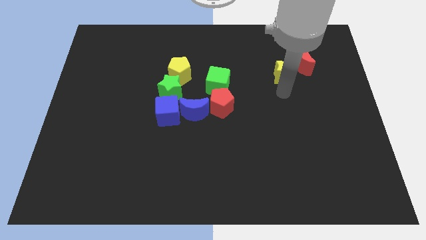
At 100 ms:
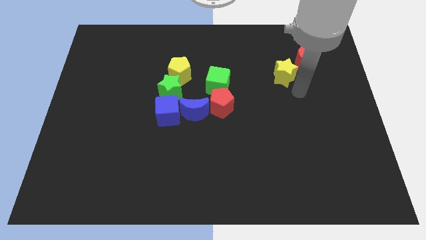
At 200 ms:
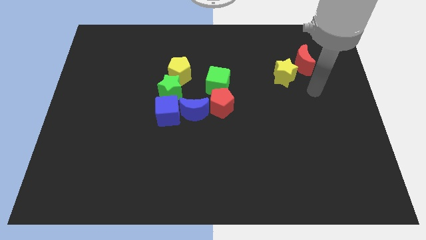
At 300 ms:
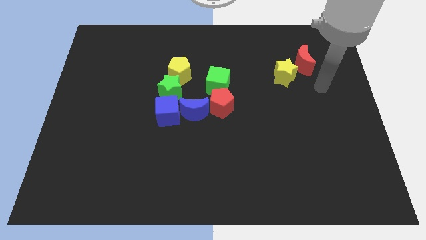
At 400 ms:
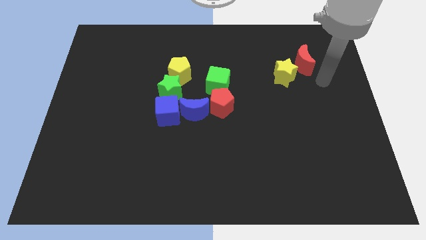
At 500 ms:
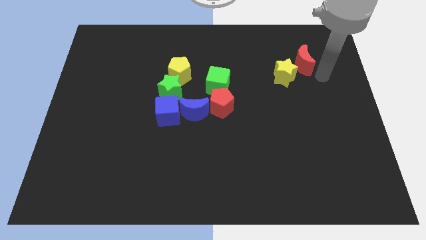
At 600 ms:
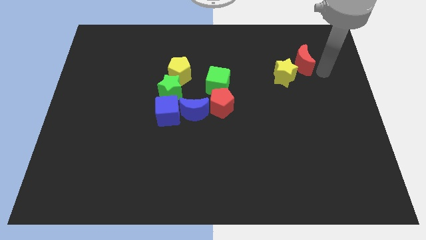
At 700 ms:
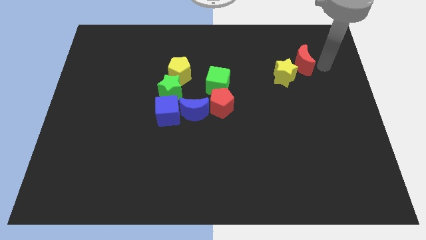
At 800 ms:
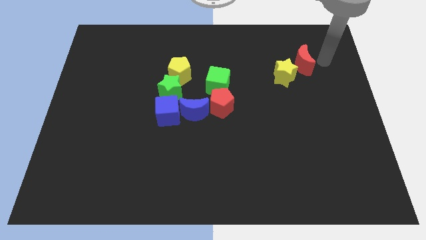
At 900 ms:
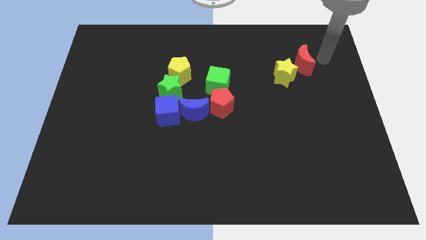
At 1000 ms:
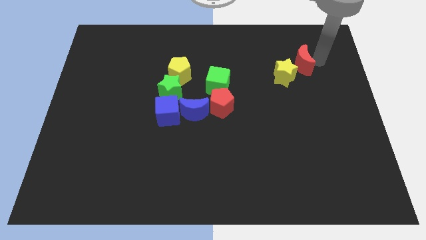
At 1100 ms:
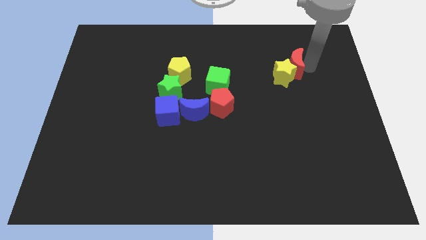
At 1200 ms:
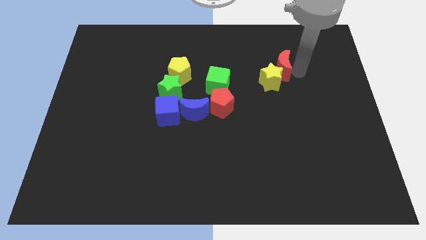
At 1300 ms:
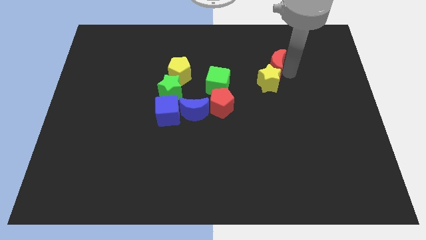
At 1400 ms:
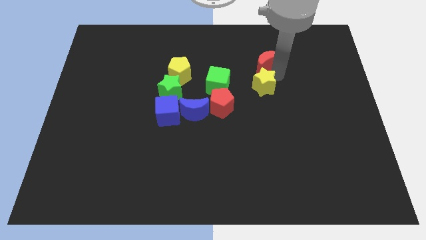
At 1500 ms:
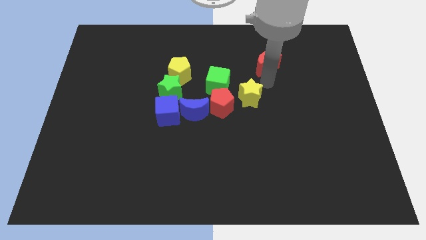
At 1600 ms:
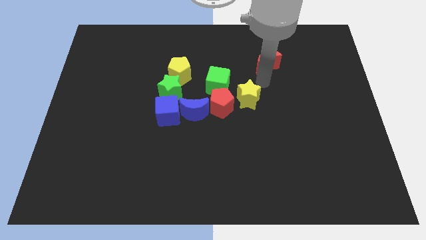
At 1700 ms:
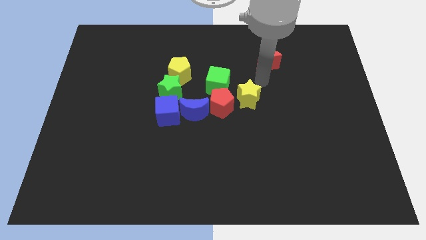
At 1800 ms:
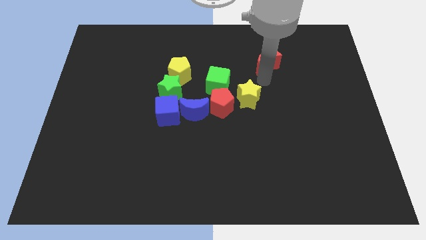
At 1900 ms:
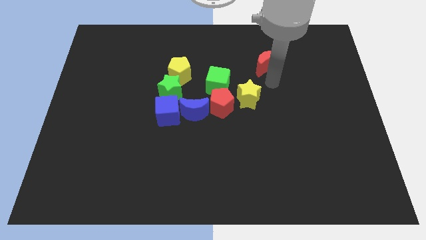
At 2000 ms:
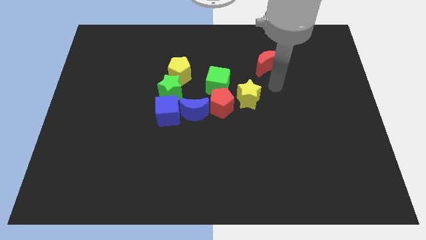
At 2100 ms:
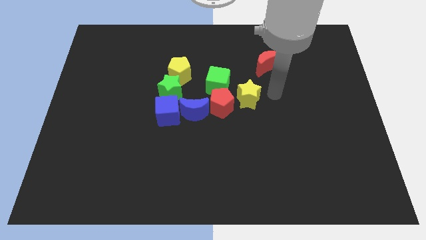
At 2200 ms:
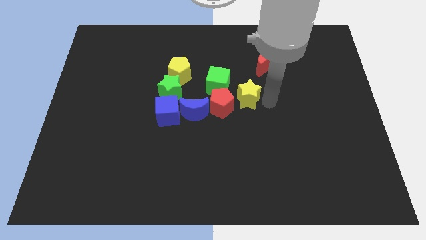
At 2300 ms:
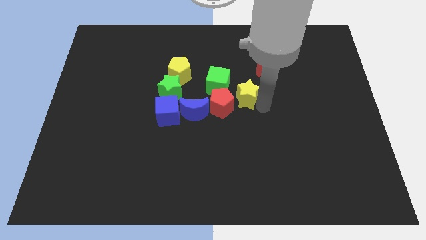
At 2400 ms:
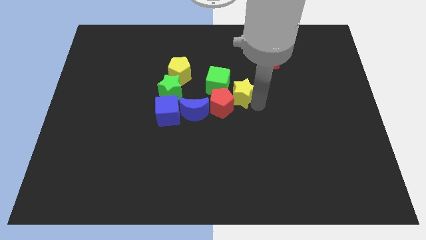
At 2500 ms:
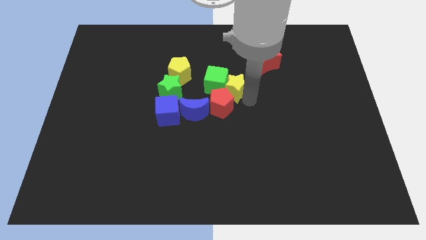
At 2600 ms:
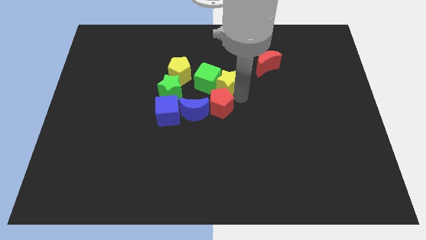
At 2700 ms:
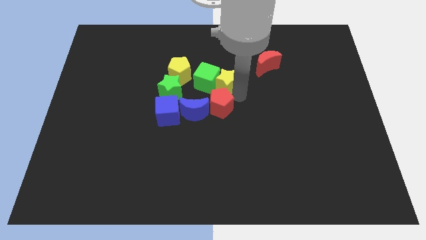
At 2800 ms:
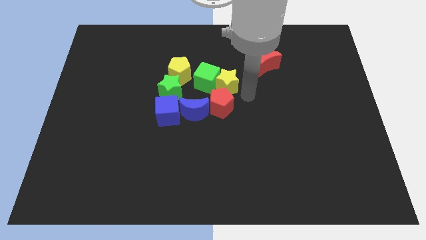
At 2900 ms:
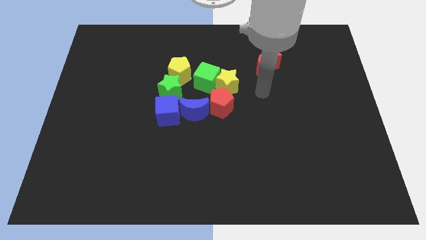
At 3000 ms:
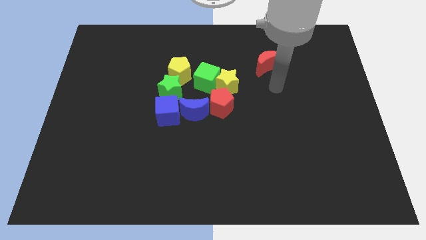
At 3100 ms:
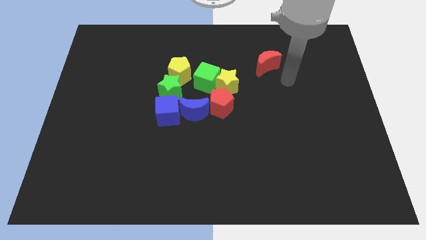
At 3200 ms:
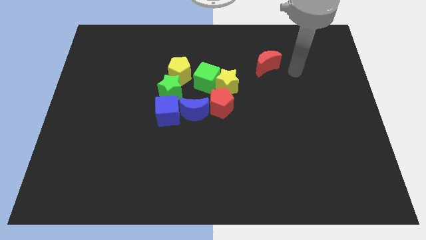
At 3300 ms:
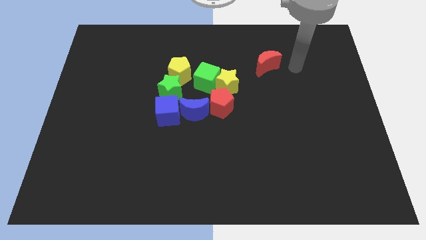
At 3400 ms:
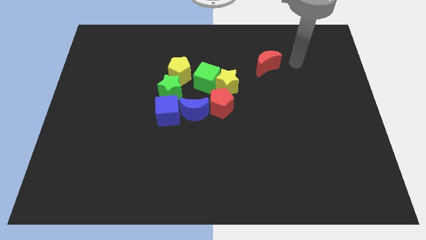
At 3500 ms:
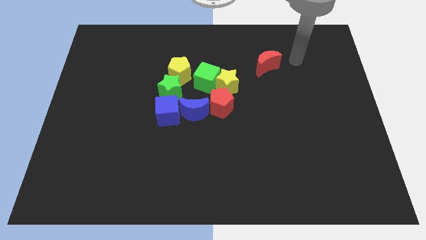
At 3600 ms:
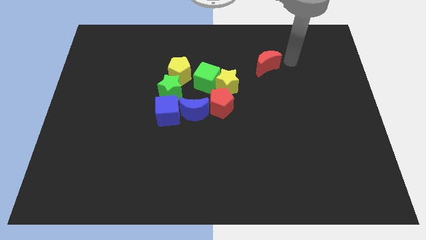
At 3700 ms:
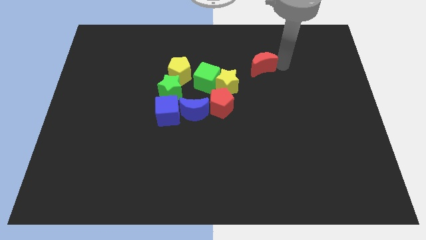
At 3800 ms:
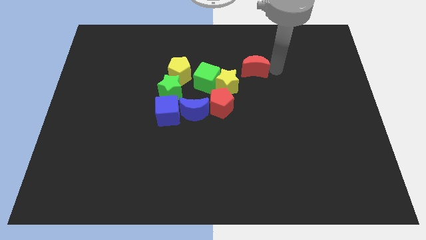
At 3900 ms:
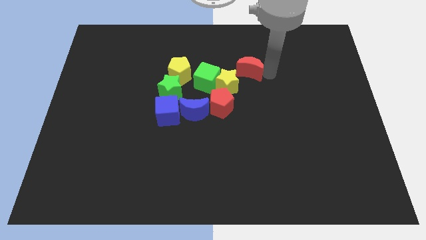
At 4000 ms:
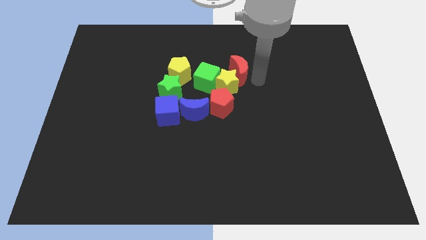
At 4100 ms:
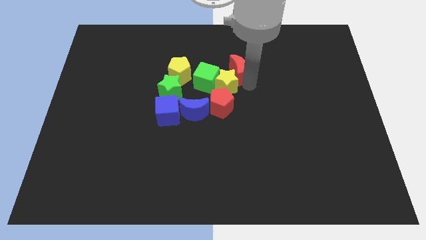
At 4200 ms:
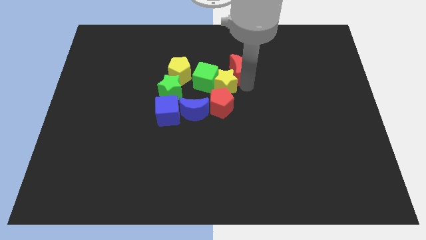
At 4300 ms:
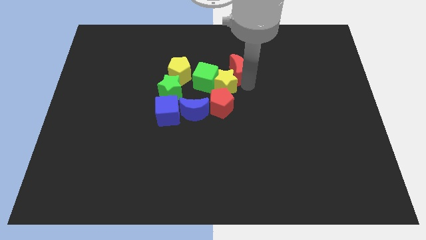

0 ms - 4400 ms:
slide the yellow star and the red crescent towards the green cube

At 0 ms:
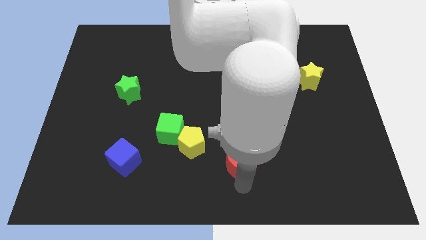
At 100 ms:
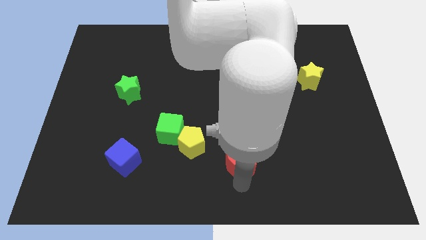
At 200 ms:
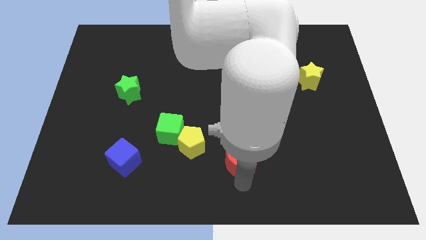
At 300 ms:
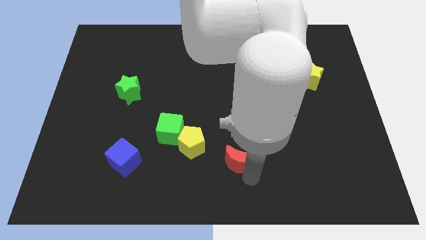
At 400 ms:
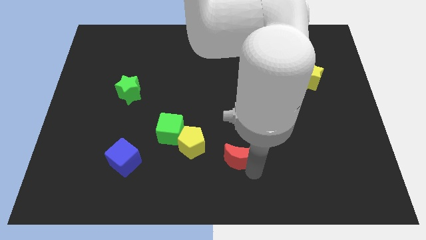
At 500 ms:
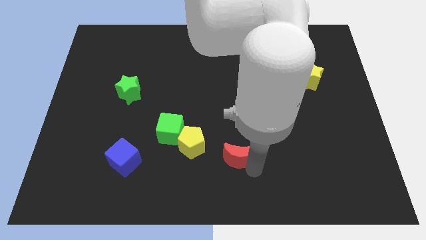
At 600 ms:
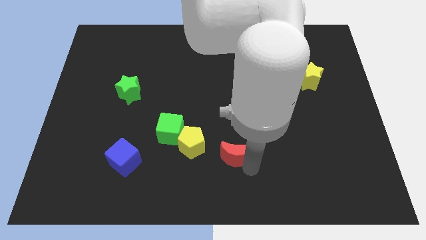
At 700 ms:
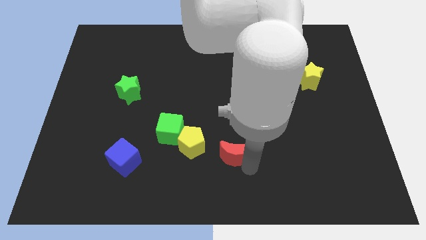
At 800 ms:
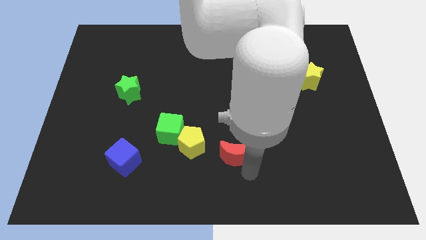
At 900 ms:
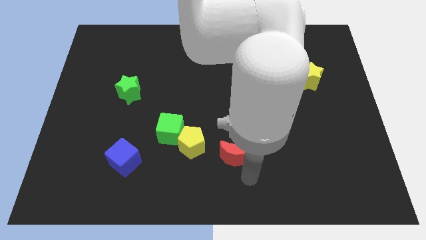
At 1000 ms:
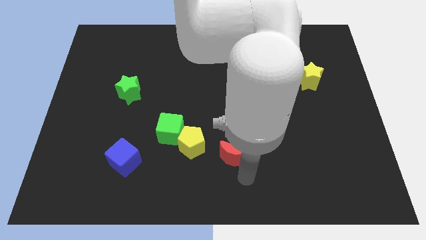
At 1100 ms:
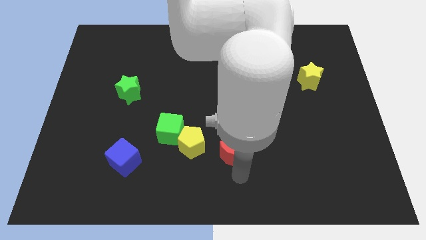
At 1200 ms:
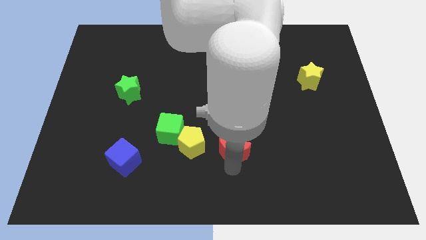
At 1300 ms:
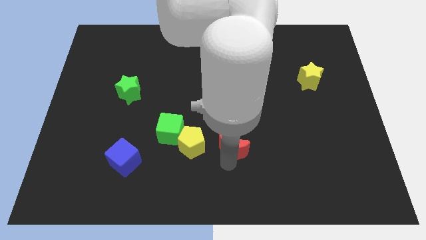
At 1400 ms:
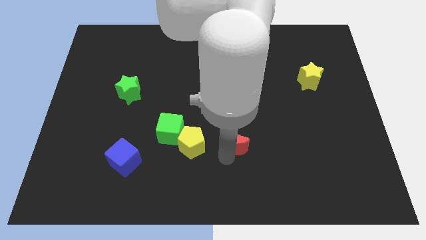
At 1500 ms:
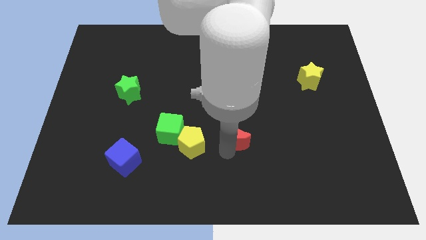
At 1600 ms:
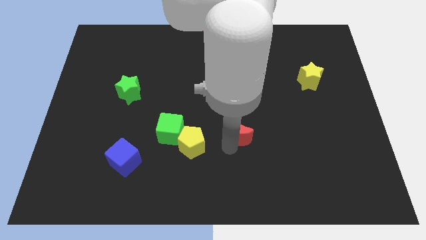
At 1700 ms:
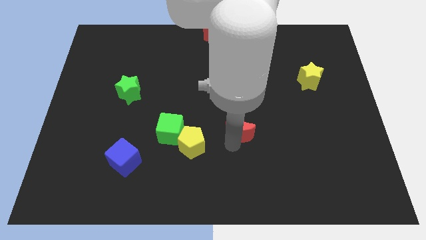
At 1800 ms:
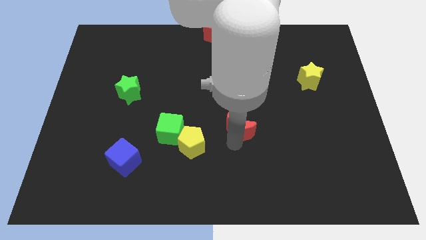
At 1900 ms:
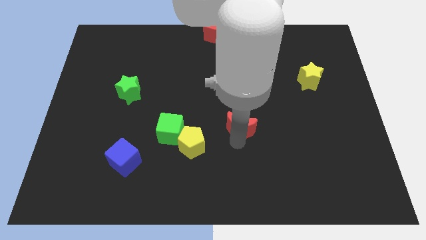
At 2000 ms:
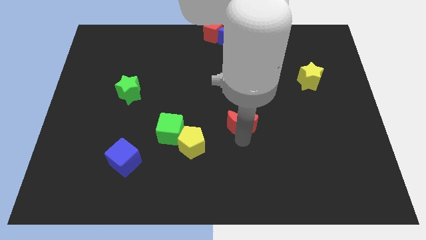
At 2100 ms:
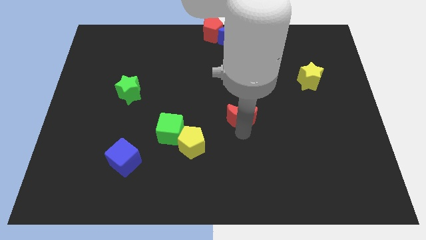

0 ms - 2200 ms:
push the red moon to the top right side of yellow pentagon

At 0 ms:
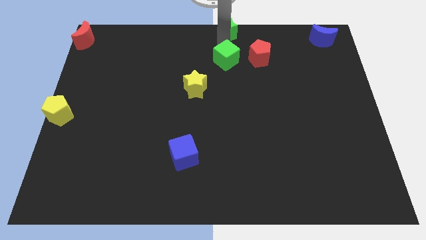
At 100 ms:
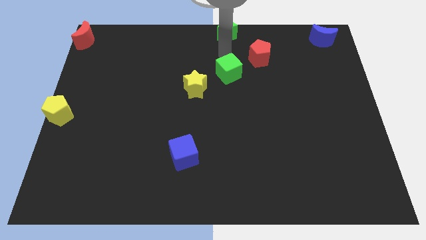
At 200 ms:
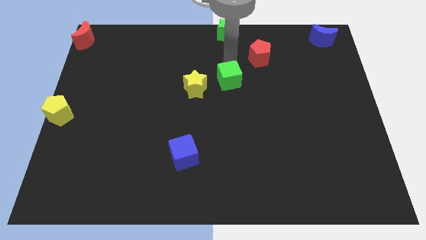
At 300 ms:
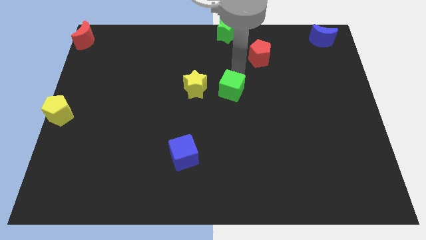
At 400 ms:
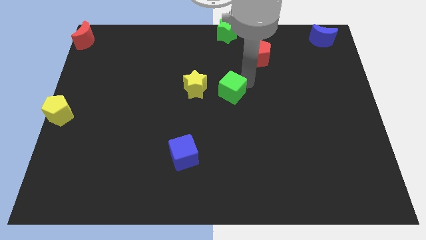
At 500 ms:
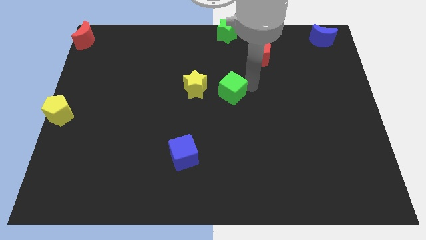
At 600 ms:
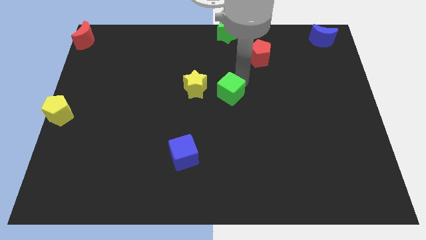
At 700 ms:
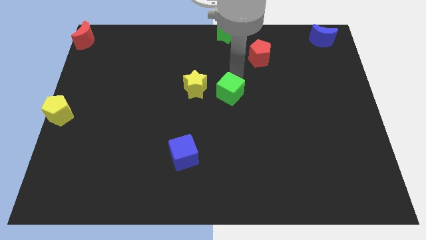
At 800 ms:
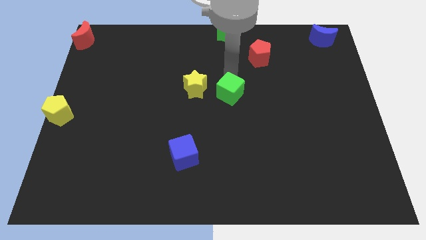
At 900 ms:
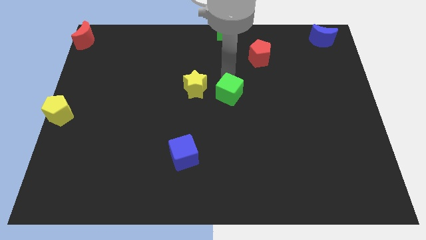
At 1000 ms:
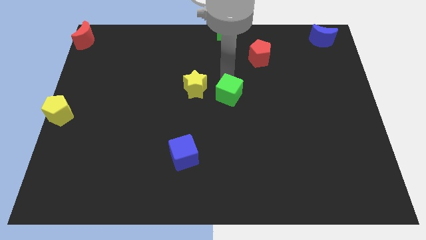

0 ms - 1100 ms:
push the green cube towards the bottom side of the board

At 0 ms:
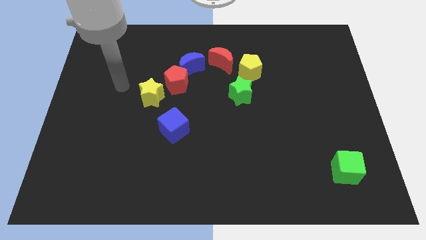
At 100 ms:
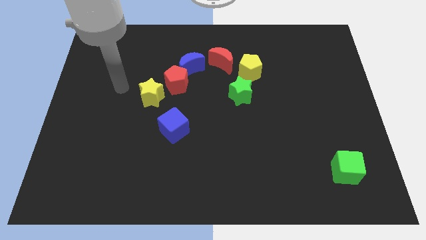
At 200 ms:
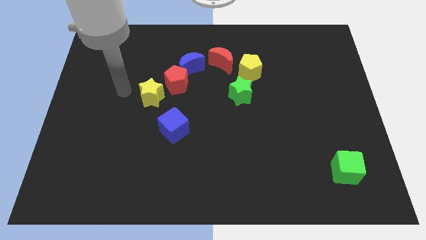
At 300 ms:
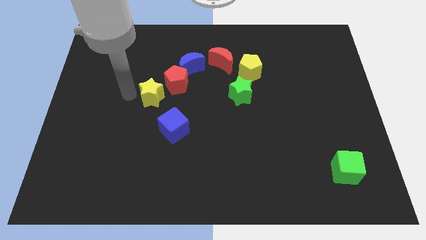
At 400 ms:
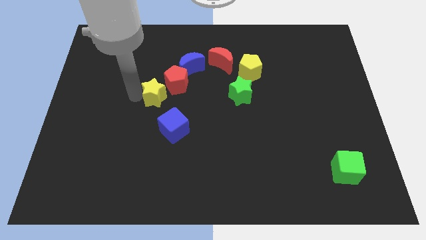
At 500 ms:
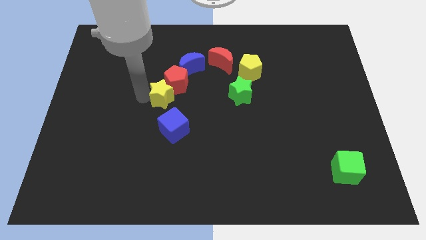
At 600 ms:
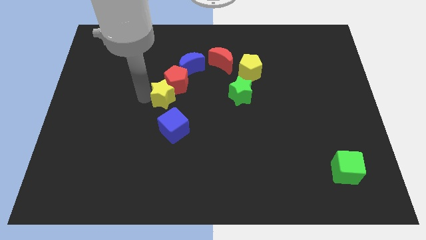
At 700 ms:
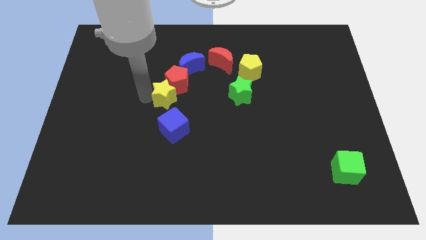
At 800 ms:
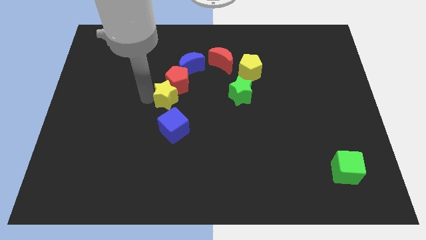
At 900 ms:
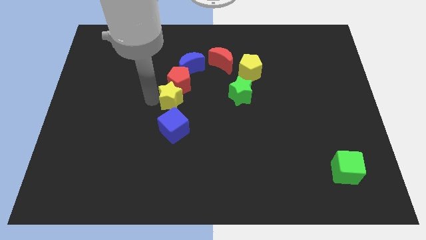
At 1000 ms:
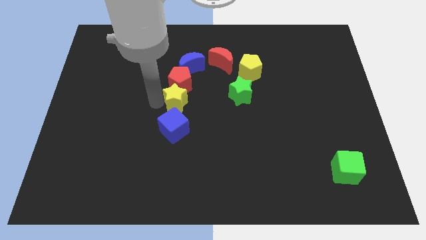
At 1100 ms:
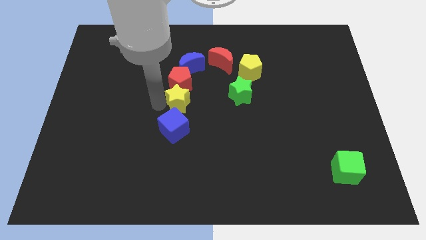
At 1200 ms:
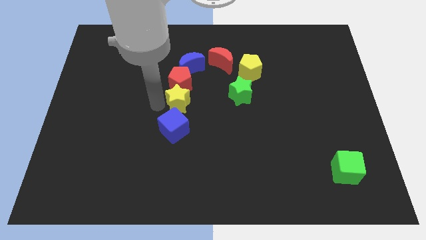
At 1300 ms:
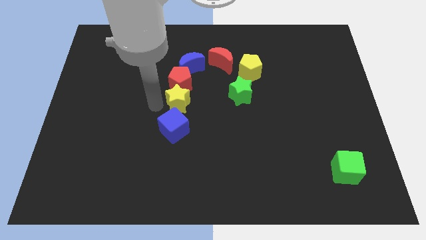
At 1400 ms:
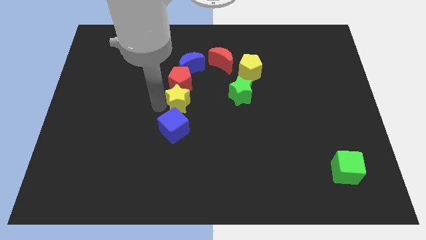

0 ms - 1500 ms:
place the yellow star in between red pentagon and blue cube
